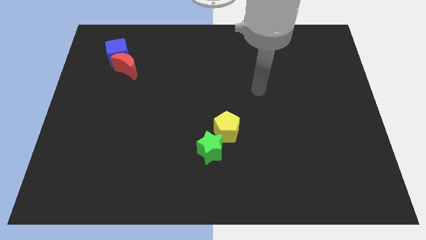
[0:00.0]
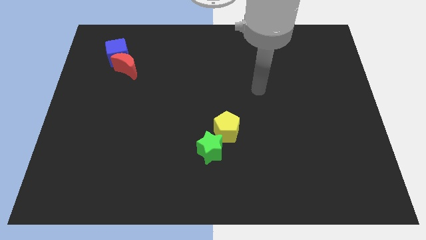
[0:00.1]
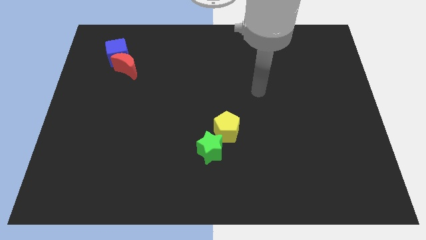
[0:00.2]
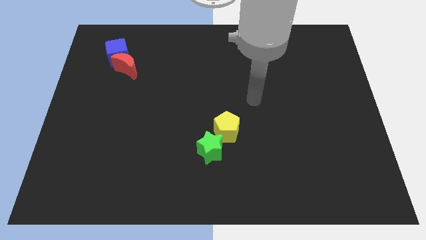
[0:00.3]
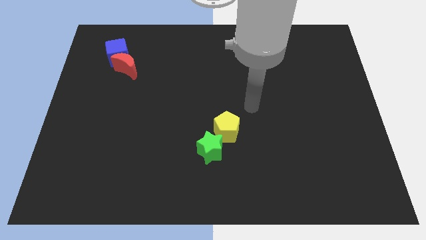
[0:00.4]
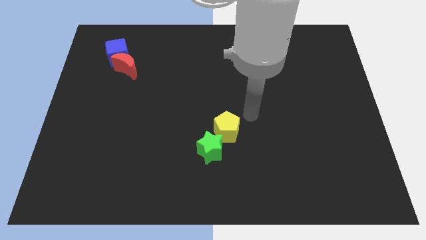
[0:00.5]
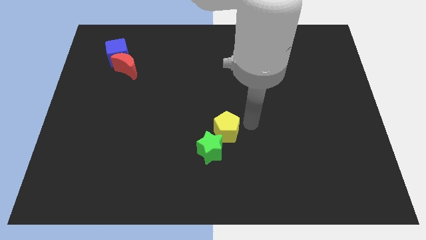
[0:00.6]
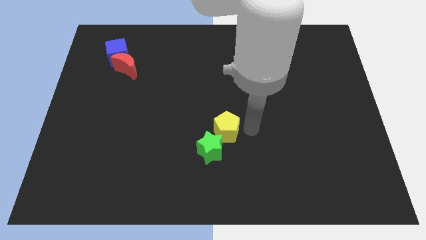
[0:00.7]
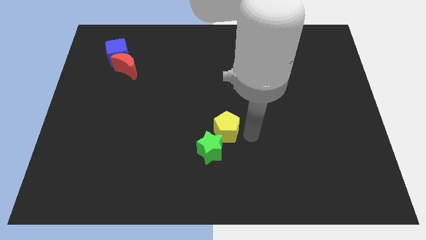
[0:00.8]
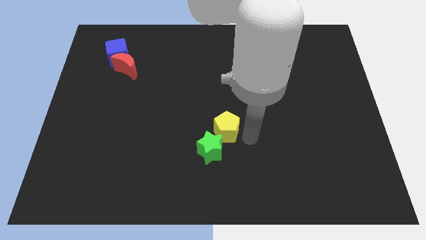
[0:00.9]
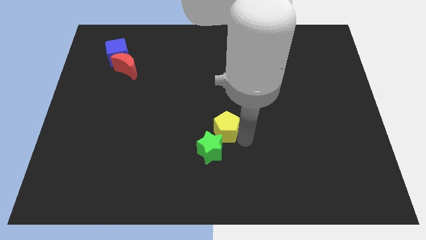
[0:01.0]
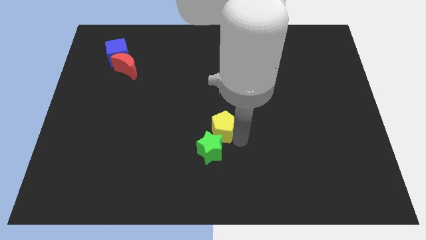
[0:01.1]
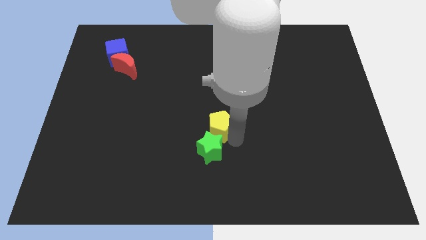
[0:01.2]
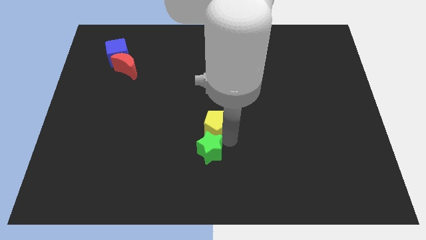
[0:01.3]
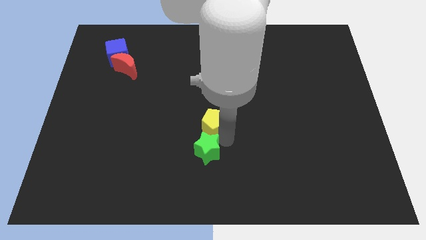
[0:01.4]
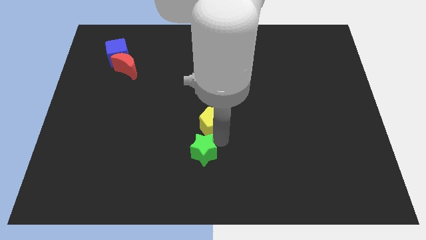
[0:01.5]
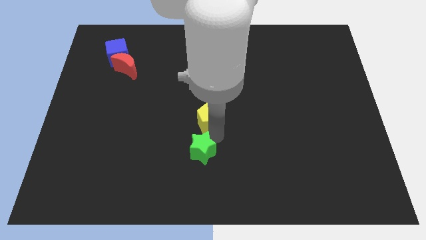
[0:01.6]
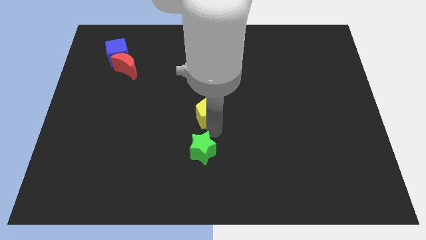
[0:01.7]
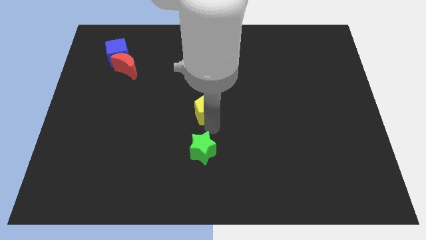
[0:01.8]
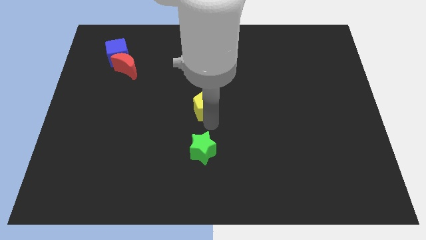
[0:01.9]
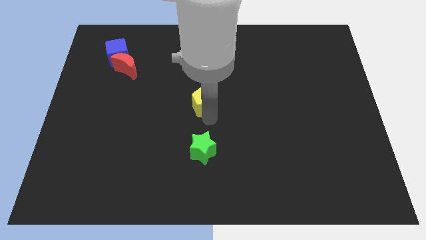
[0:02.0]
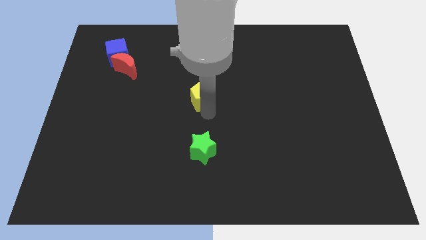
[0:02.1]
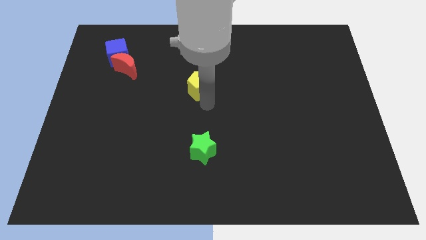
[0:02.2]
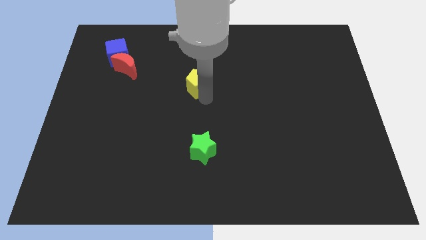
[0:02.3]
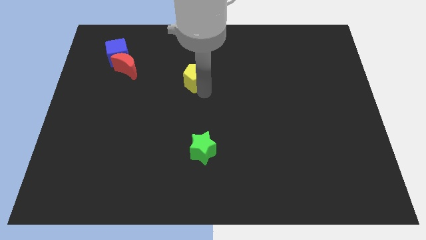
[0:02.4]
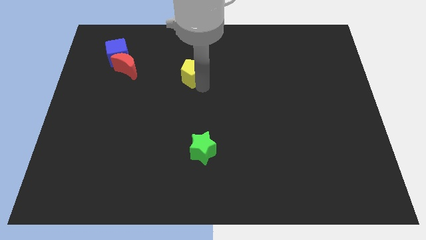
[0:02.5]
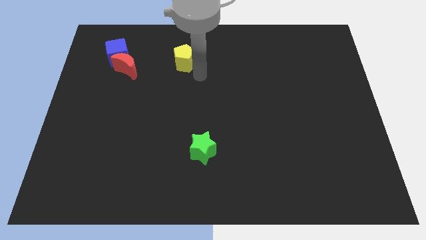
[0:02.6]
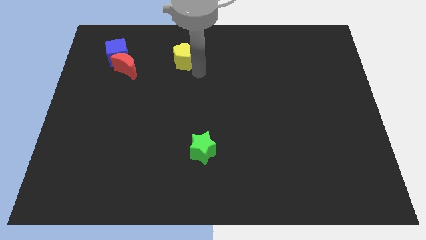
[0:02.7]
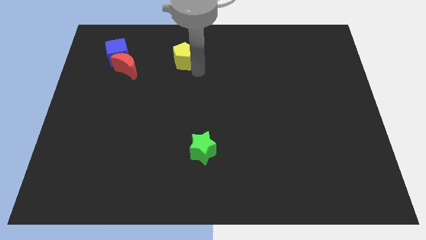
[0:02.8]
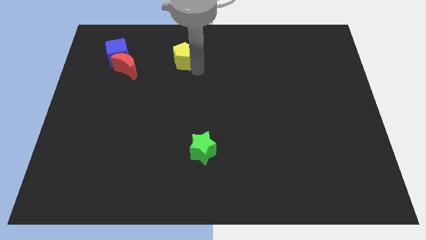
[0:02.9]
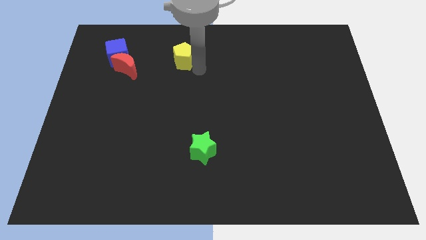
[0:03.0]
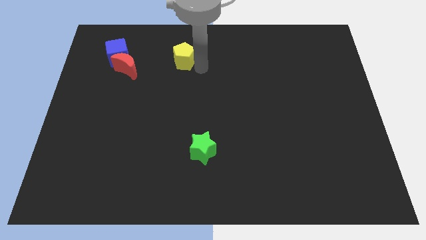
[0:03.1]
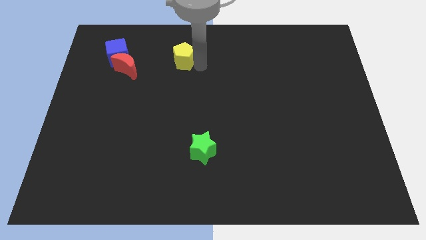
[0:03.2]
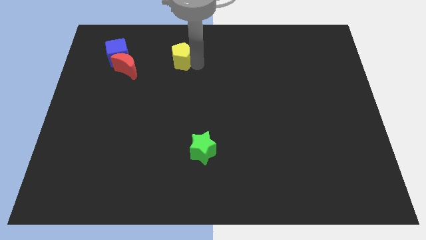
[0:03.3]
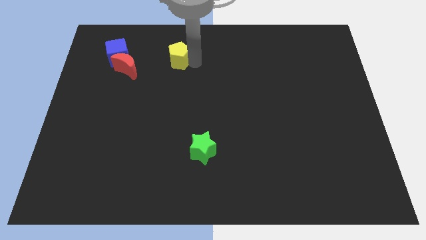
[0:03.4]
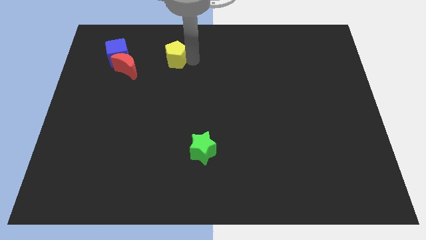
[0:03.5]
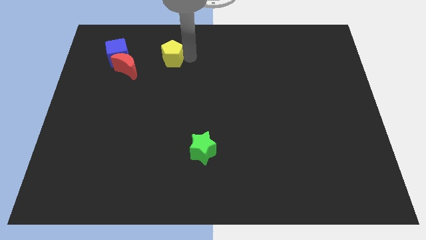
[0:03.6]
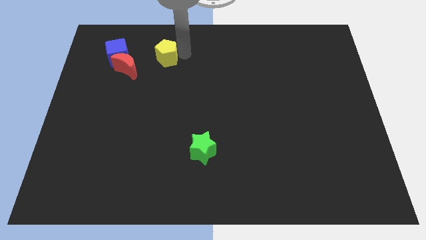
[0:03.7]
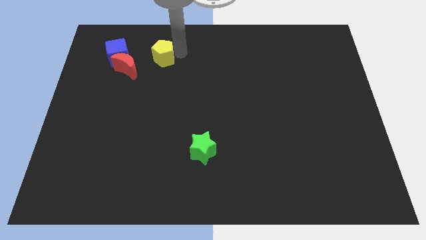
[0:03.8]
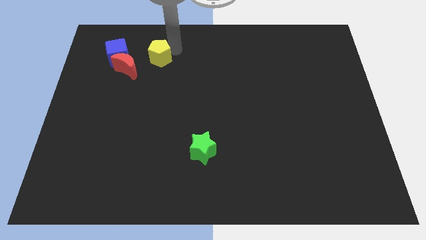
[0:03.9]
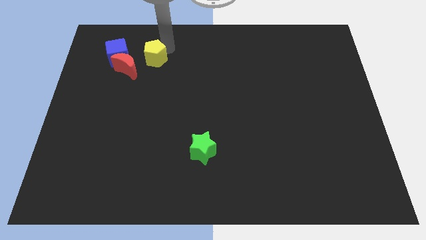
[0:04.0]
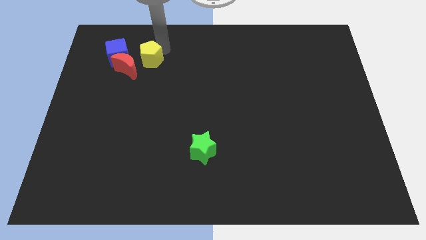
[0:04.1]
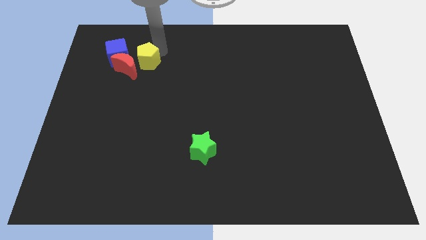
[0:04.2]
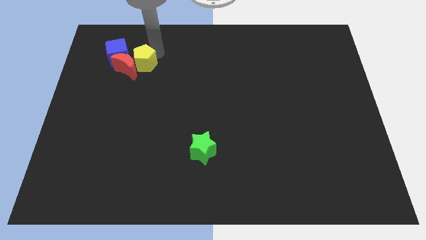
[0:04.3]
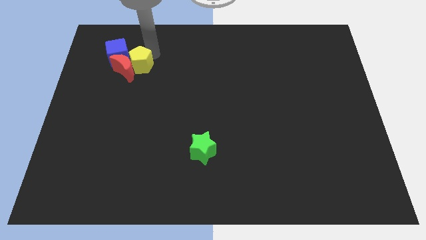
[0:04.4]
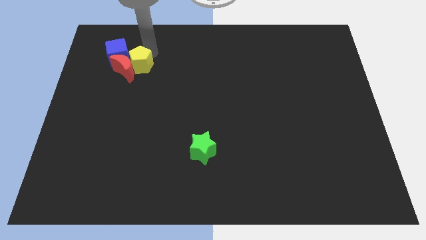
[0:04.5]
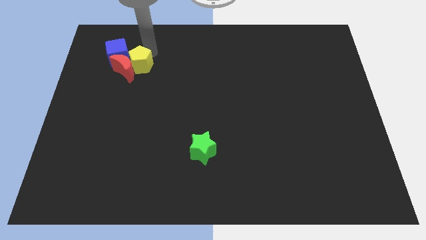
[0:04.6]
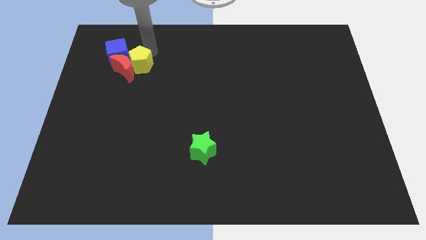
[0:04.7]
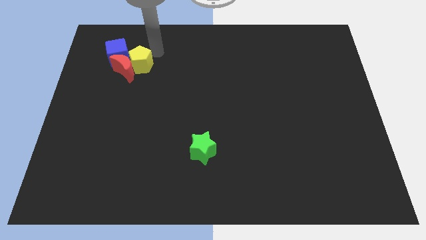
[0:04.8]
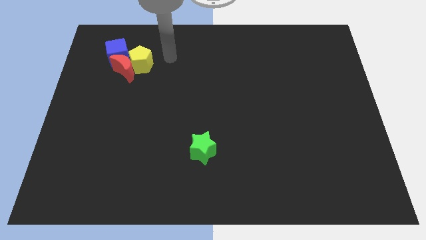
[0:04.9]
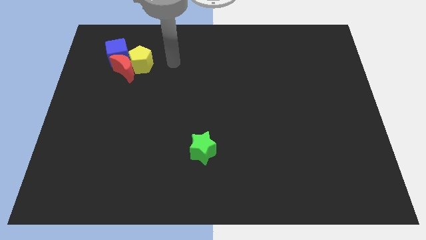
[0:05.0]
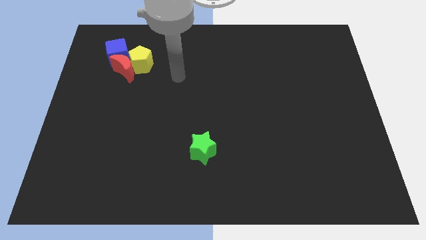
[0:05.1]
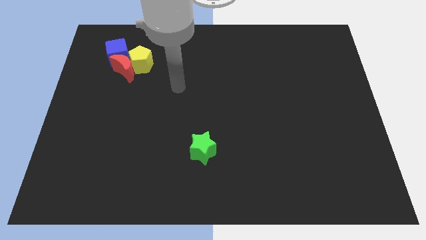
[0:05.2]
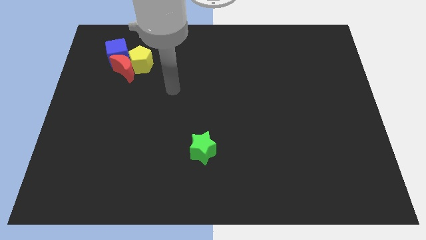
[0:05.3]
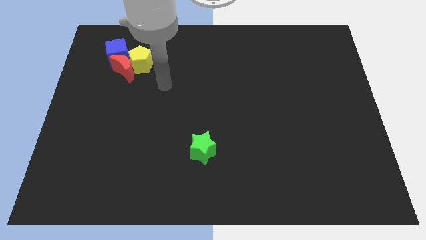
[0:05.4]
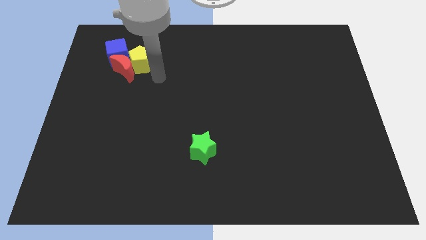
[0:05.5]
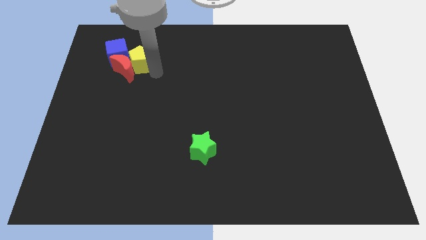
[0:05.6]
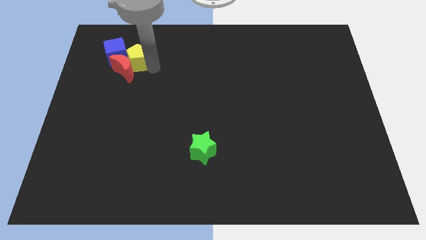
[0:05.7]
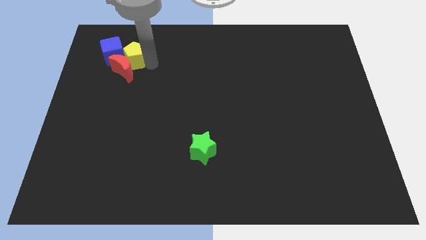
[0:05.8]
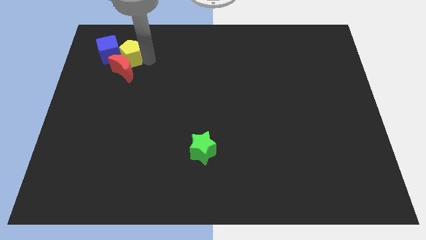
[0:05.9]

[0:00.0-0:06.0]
slide the yellow pentagon close to the blue block

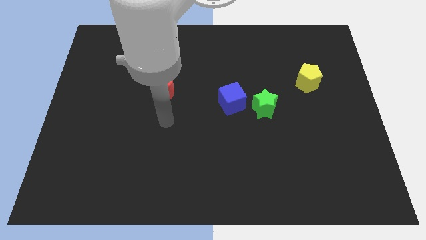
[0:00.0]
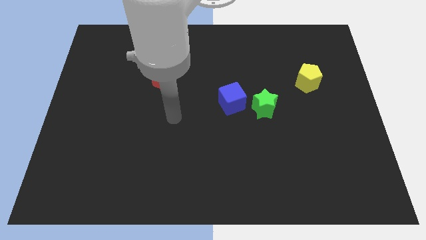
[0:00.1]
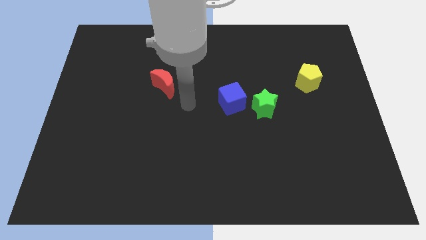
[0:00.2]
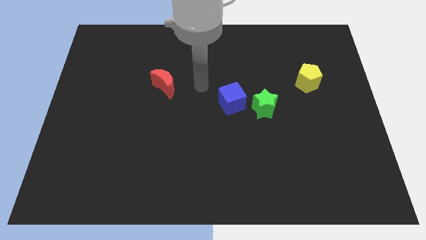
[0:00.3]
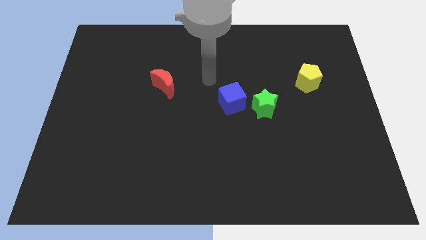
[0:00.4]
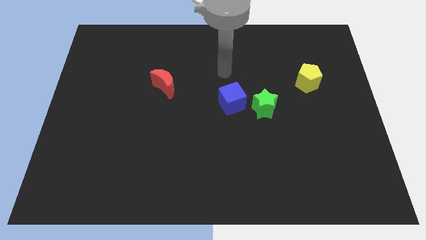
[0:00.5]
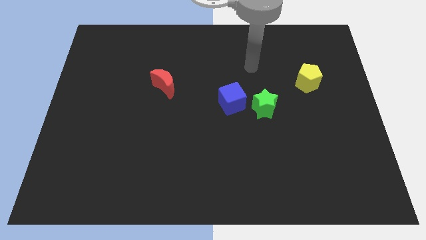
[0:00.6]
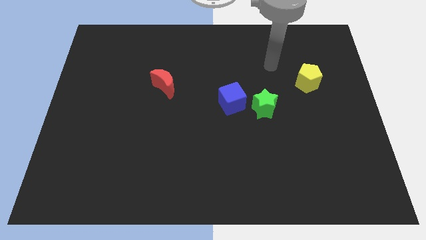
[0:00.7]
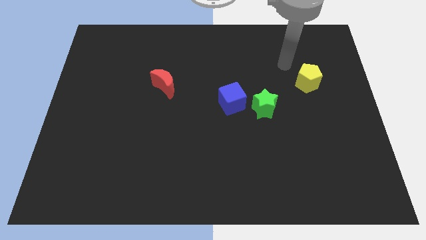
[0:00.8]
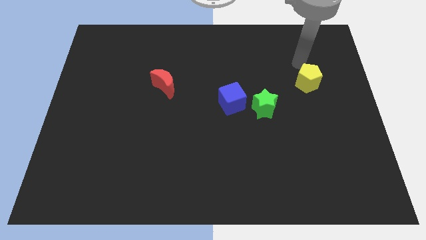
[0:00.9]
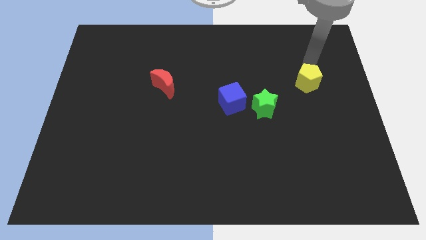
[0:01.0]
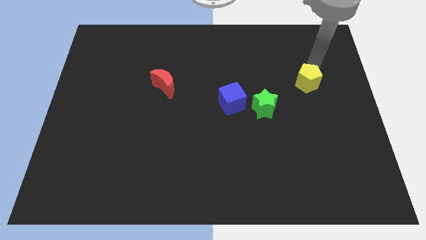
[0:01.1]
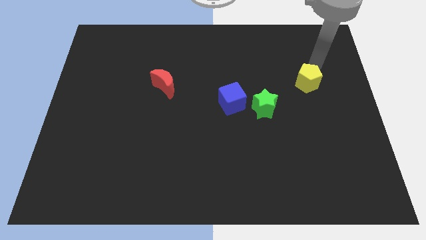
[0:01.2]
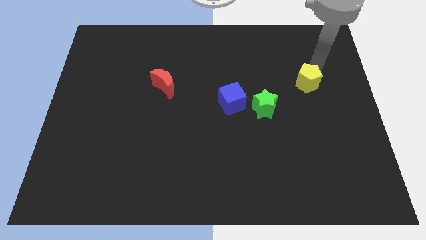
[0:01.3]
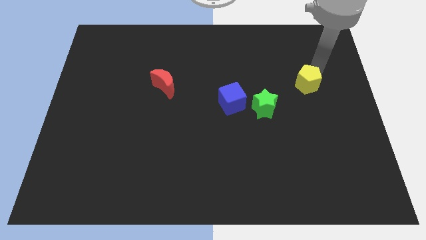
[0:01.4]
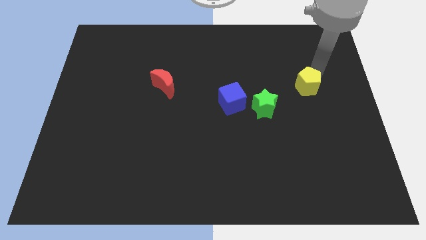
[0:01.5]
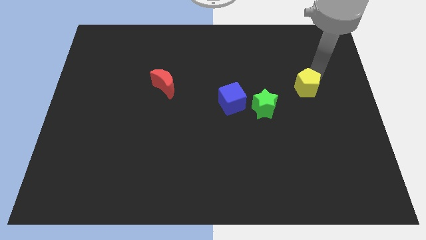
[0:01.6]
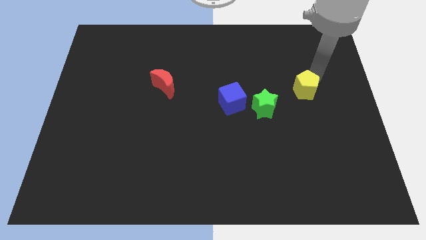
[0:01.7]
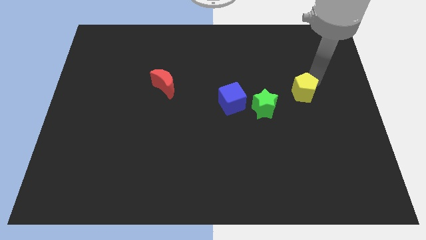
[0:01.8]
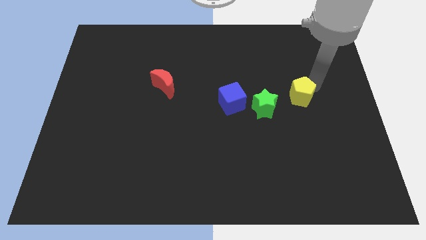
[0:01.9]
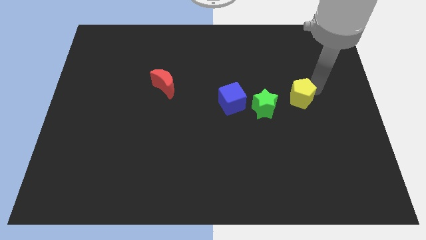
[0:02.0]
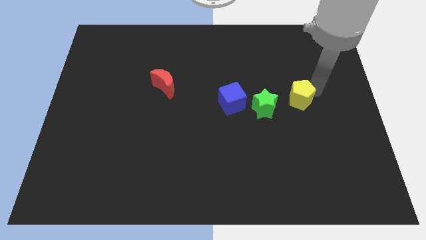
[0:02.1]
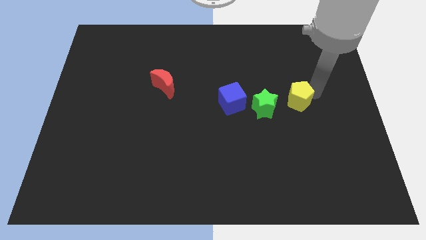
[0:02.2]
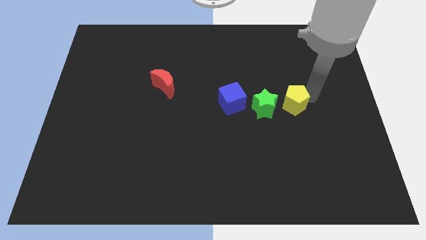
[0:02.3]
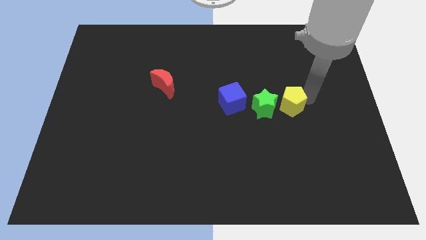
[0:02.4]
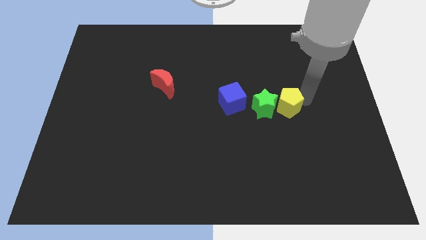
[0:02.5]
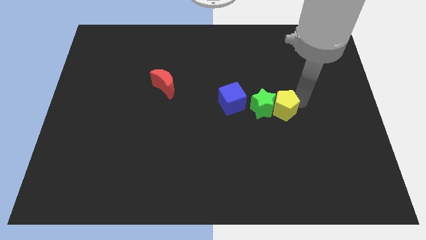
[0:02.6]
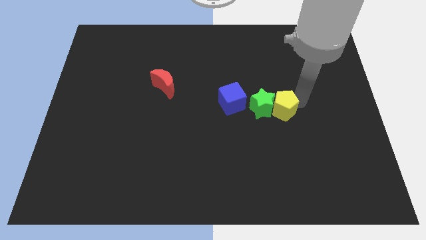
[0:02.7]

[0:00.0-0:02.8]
push the yellow pentagon to the star
